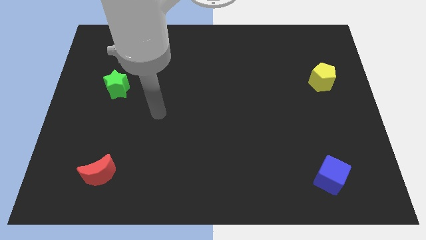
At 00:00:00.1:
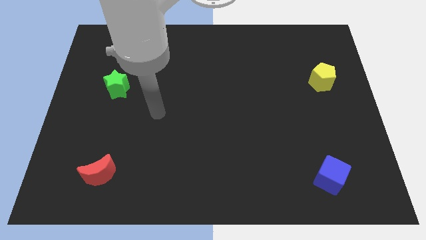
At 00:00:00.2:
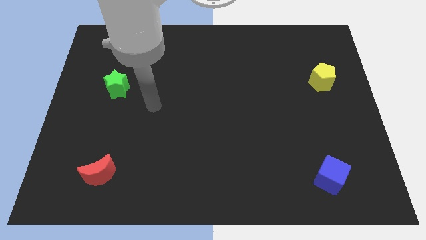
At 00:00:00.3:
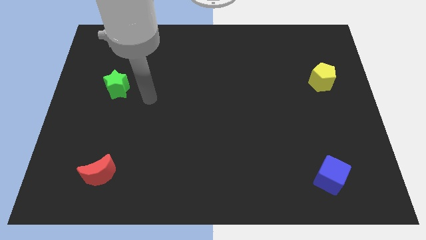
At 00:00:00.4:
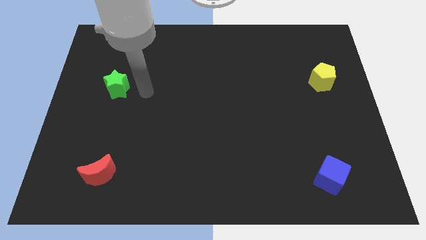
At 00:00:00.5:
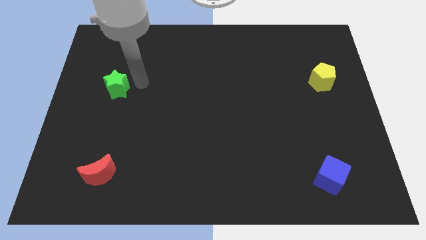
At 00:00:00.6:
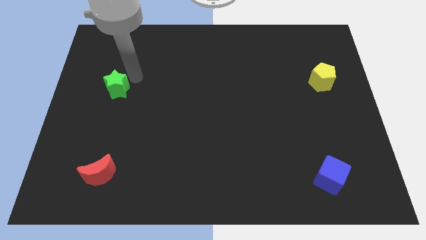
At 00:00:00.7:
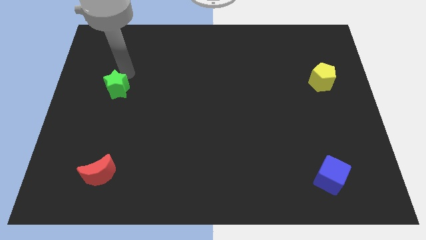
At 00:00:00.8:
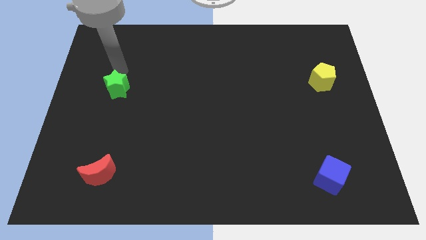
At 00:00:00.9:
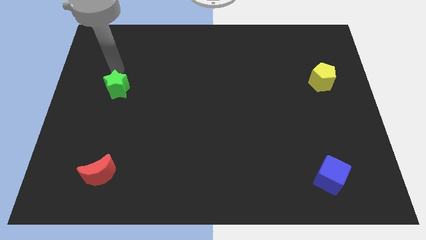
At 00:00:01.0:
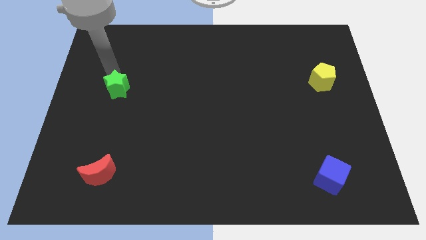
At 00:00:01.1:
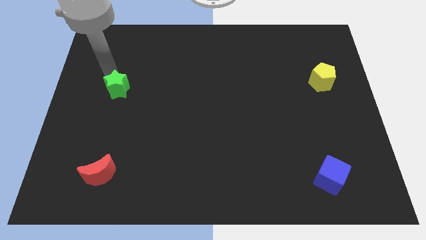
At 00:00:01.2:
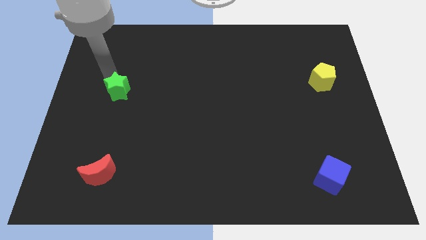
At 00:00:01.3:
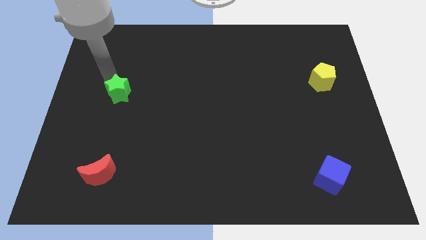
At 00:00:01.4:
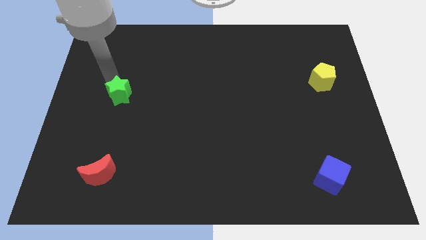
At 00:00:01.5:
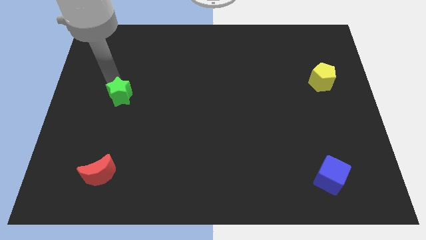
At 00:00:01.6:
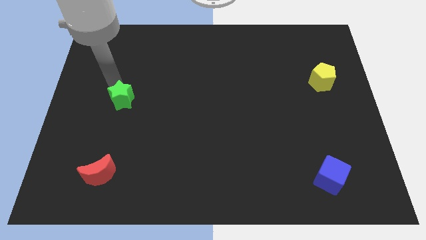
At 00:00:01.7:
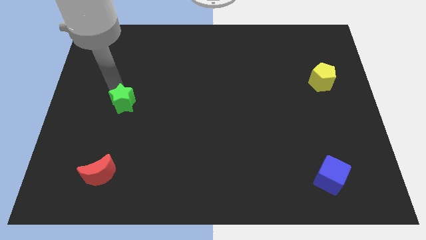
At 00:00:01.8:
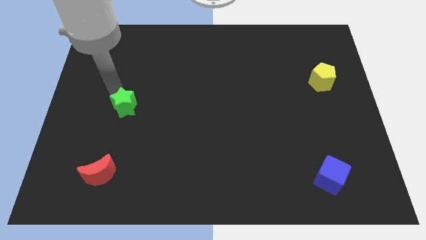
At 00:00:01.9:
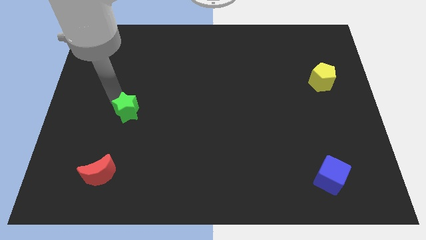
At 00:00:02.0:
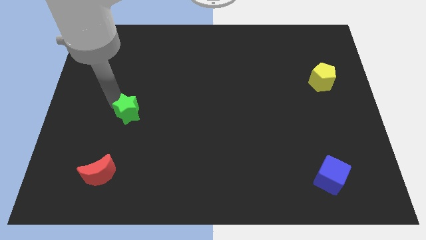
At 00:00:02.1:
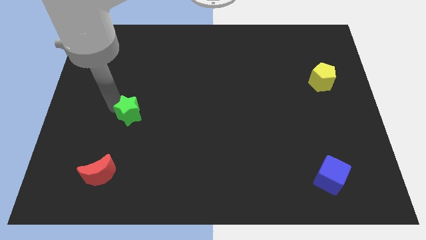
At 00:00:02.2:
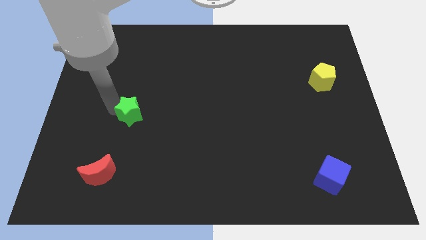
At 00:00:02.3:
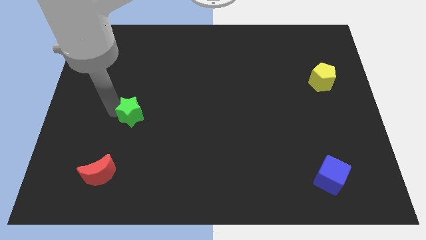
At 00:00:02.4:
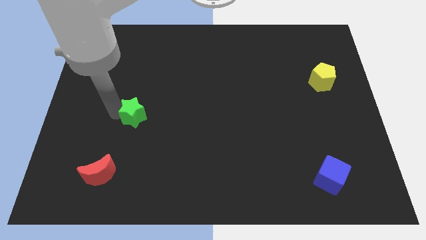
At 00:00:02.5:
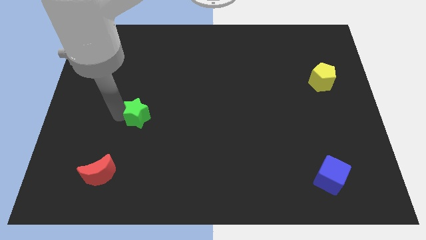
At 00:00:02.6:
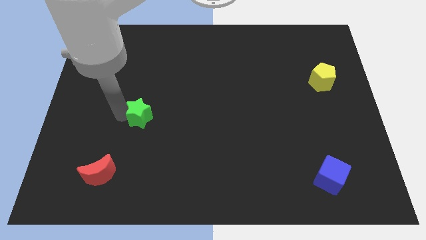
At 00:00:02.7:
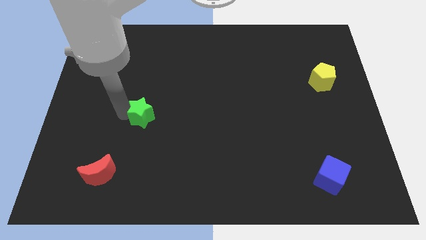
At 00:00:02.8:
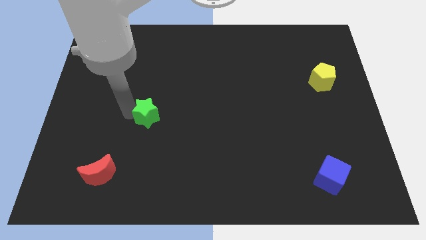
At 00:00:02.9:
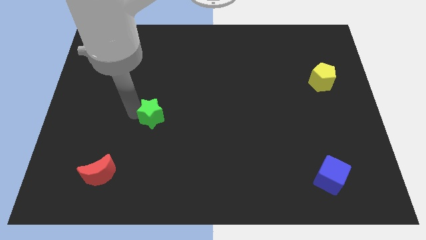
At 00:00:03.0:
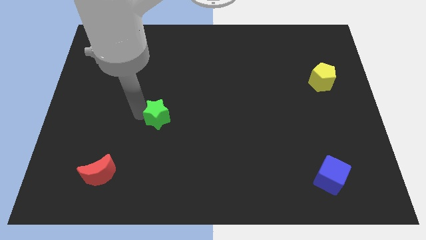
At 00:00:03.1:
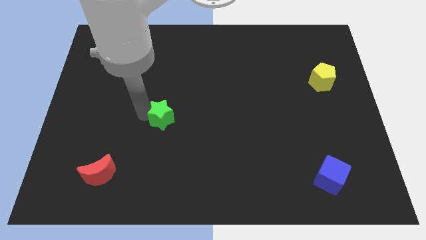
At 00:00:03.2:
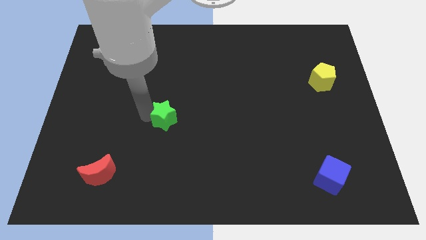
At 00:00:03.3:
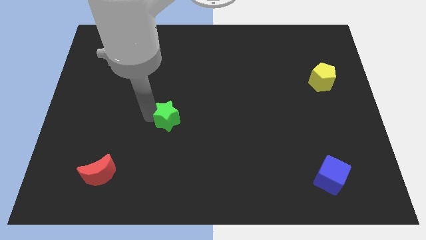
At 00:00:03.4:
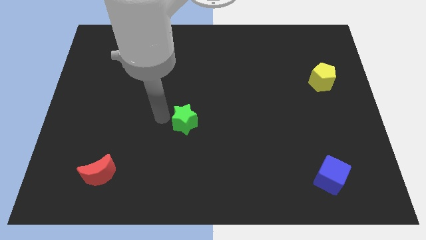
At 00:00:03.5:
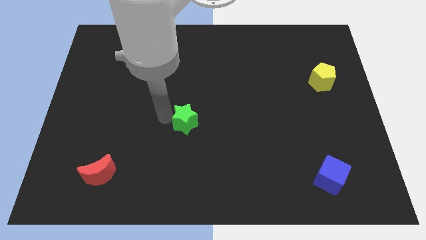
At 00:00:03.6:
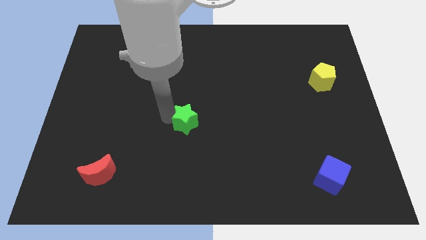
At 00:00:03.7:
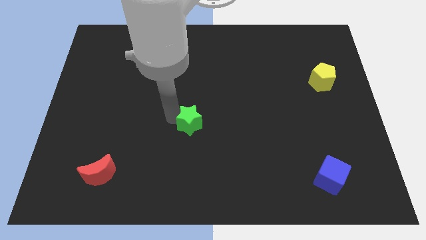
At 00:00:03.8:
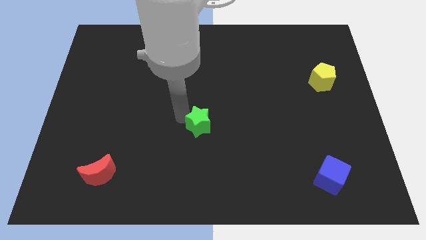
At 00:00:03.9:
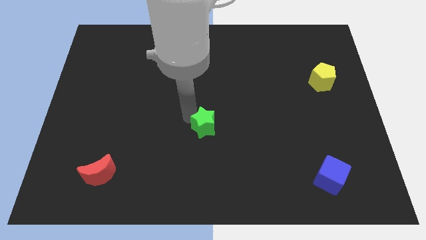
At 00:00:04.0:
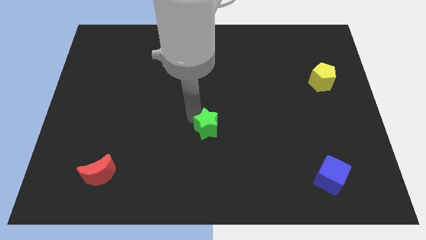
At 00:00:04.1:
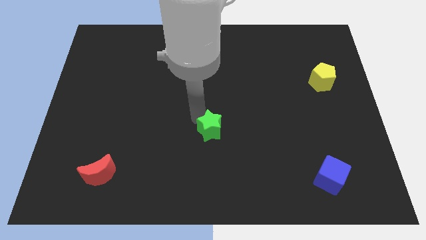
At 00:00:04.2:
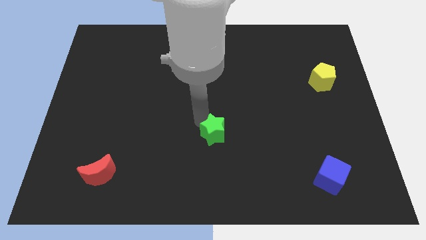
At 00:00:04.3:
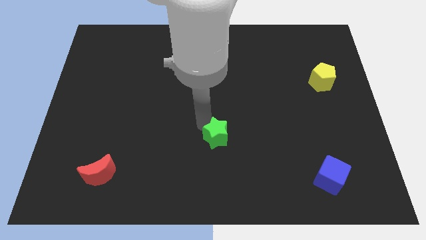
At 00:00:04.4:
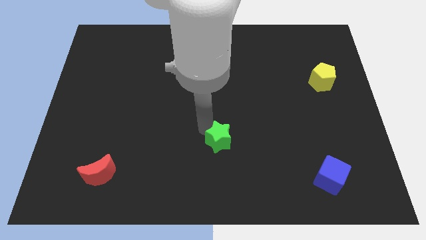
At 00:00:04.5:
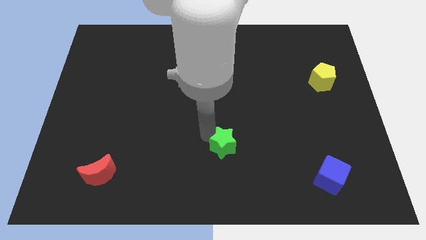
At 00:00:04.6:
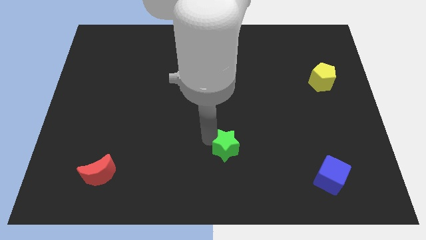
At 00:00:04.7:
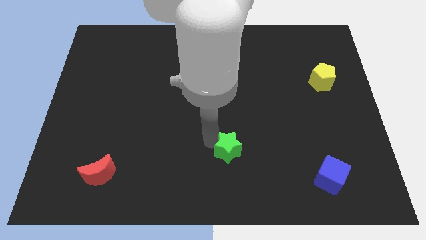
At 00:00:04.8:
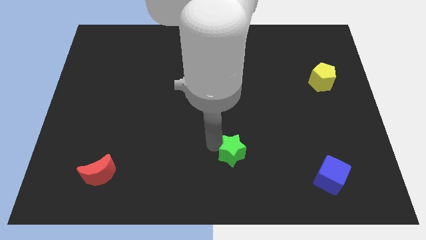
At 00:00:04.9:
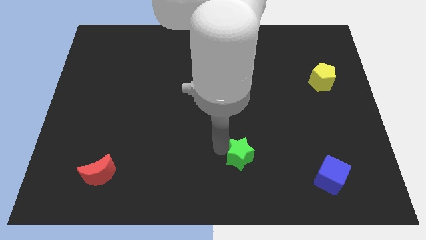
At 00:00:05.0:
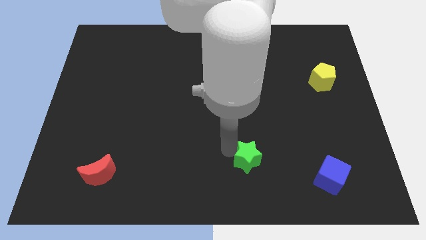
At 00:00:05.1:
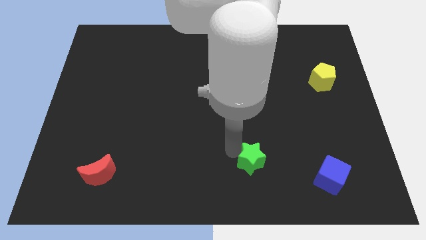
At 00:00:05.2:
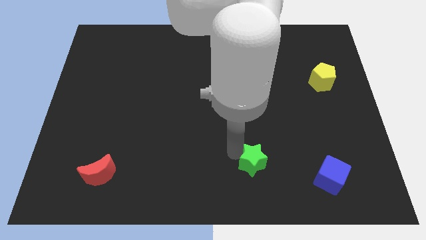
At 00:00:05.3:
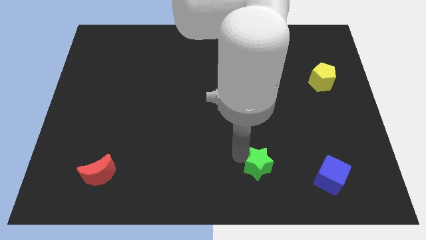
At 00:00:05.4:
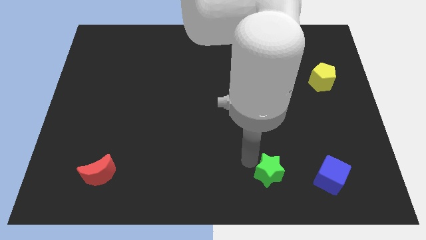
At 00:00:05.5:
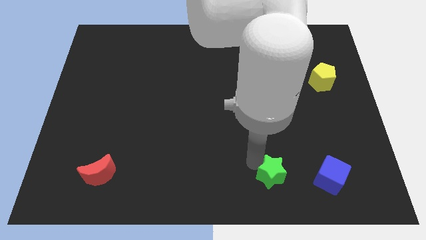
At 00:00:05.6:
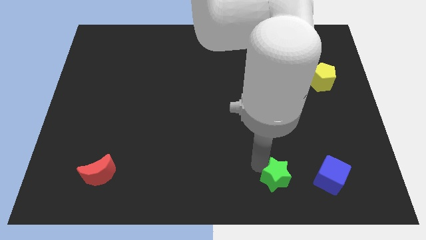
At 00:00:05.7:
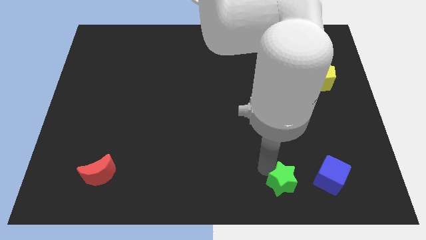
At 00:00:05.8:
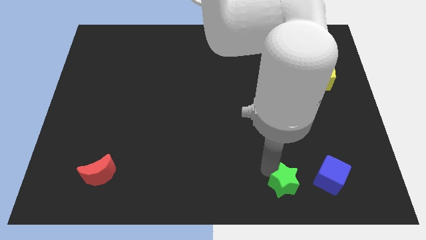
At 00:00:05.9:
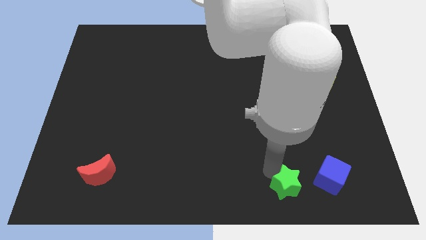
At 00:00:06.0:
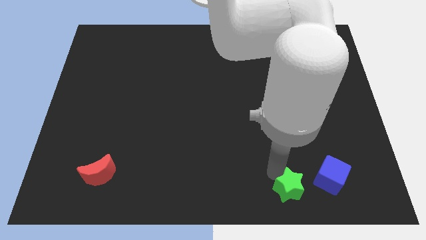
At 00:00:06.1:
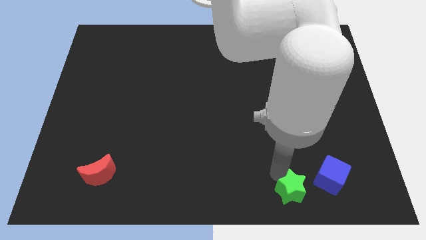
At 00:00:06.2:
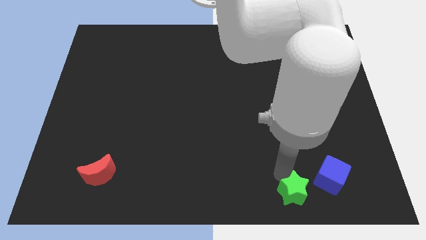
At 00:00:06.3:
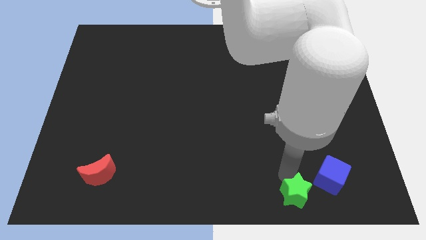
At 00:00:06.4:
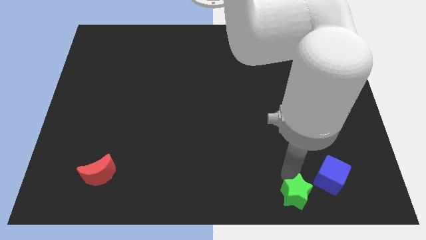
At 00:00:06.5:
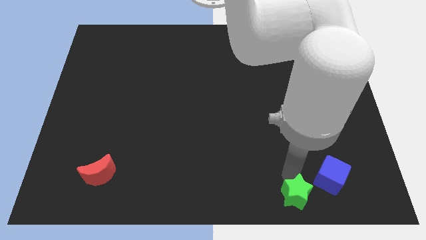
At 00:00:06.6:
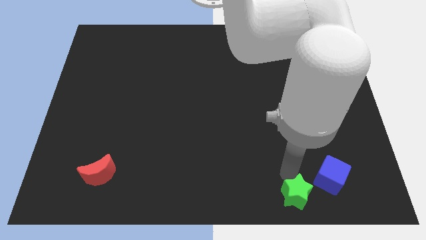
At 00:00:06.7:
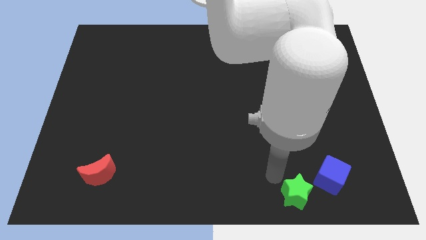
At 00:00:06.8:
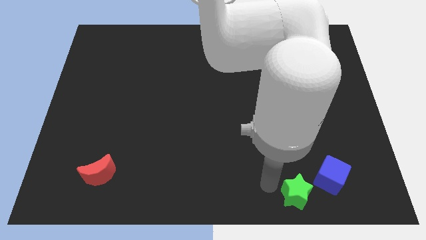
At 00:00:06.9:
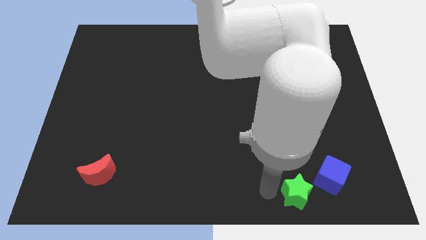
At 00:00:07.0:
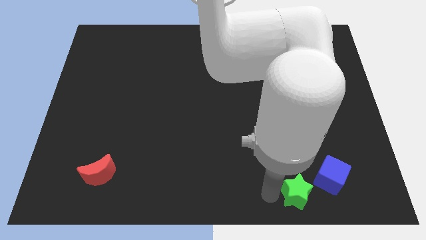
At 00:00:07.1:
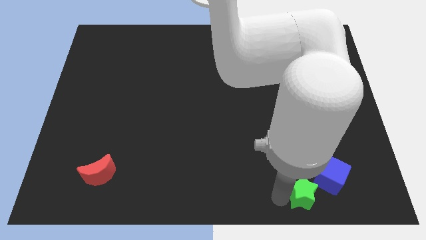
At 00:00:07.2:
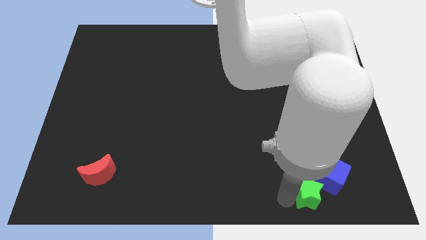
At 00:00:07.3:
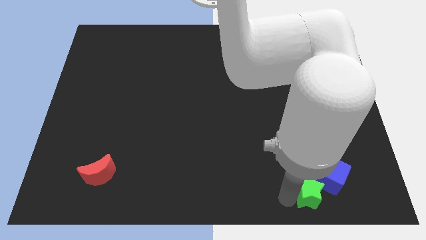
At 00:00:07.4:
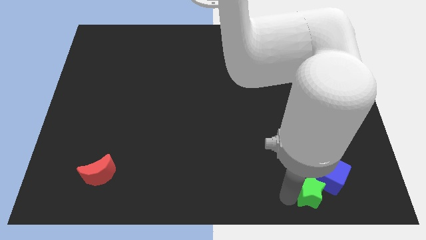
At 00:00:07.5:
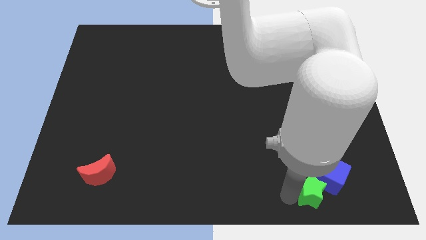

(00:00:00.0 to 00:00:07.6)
push the green star towards the blue block

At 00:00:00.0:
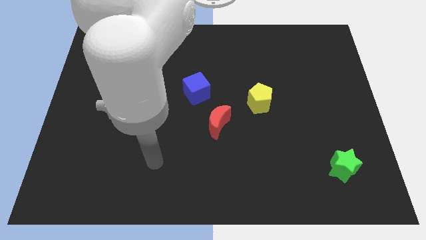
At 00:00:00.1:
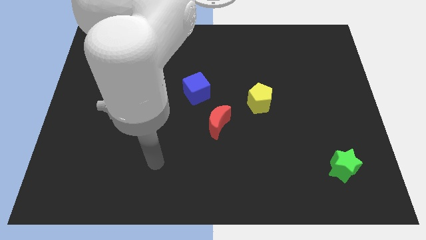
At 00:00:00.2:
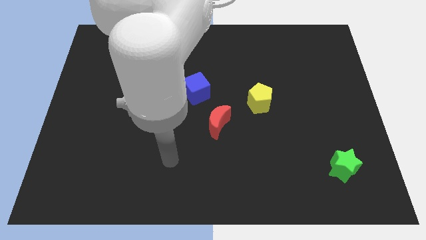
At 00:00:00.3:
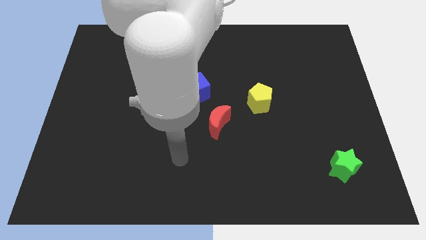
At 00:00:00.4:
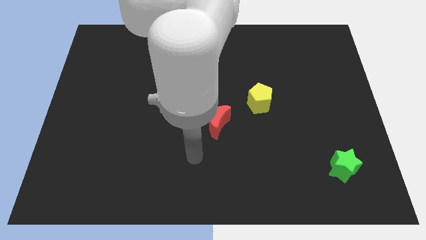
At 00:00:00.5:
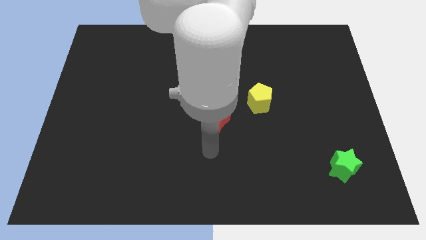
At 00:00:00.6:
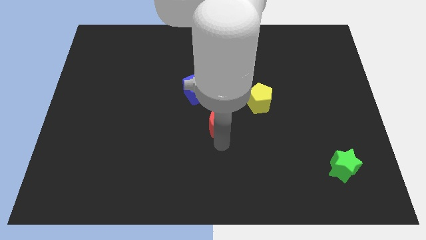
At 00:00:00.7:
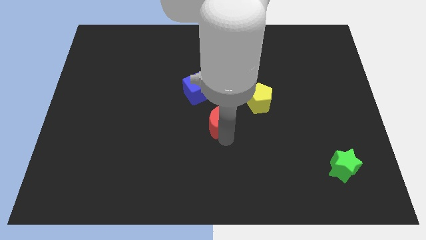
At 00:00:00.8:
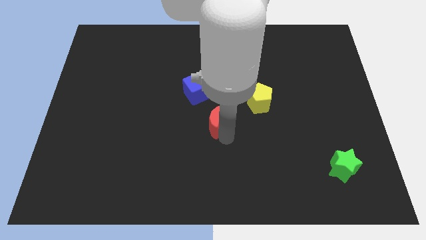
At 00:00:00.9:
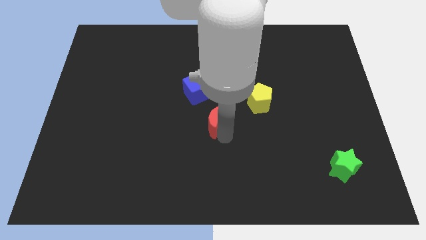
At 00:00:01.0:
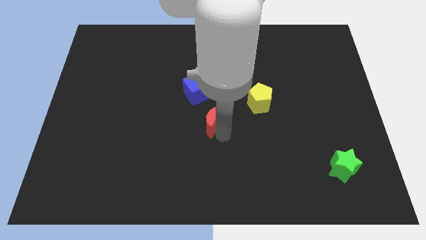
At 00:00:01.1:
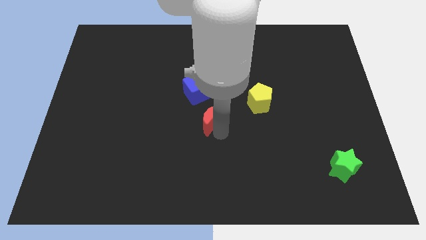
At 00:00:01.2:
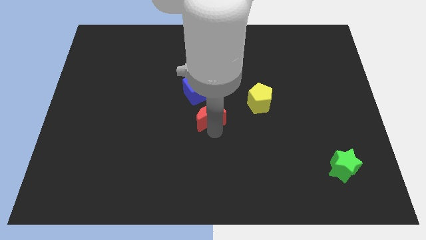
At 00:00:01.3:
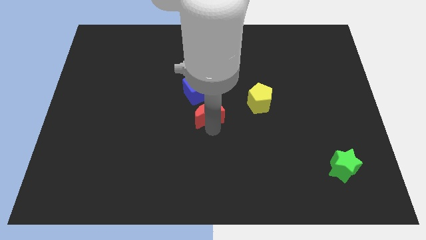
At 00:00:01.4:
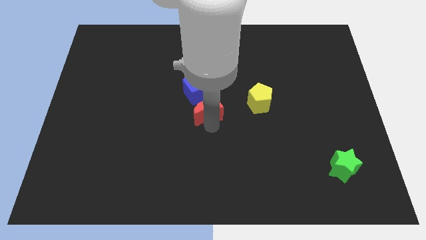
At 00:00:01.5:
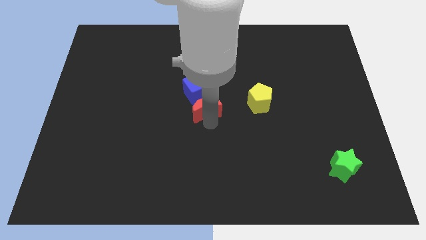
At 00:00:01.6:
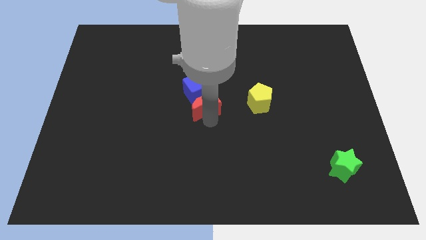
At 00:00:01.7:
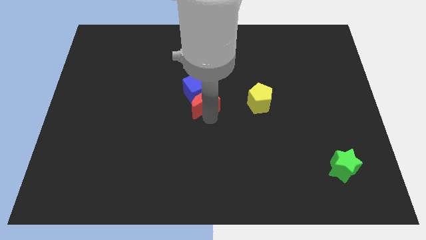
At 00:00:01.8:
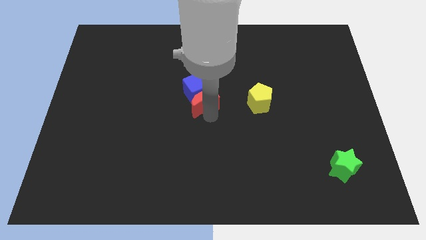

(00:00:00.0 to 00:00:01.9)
move the moon to the cube
